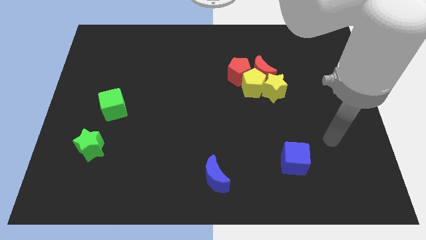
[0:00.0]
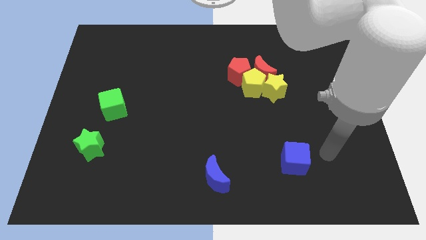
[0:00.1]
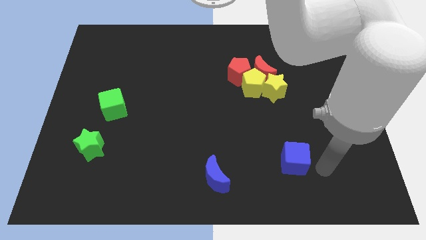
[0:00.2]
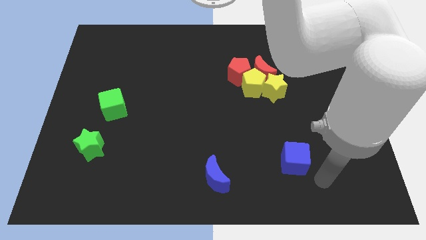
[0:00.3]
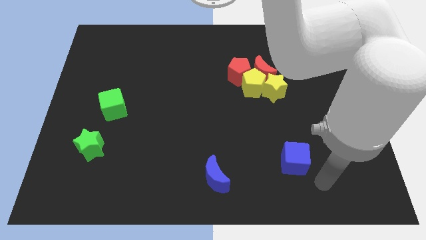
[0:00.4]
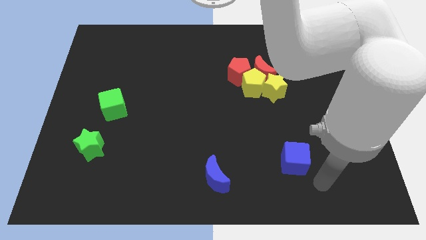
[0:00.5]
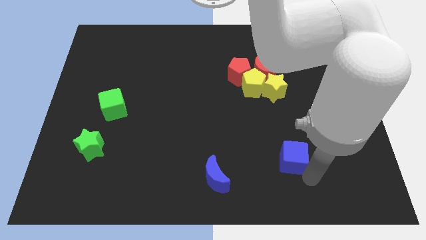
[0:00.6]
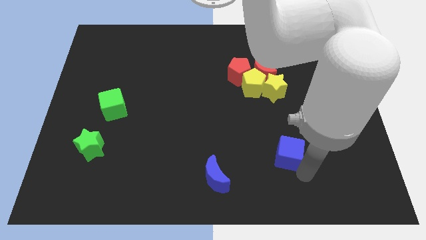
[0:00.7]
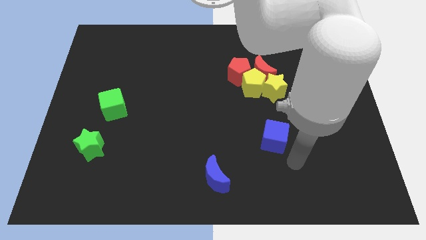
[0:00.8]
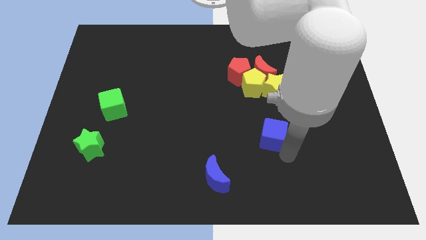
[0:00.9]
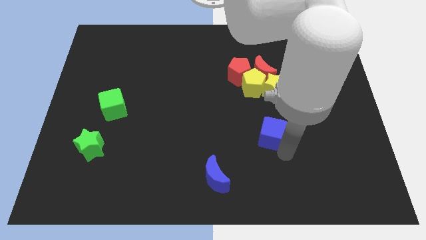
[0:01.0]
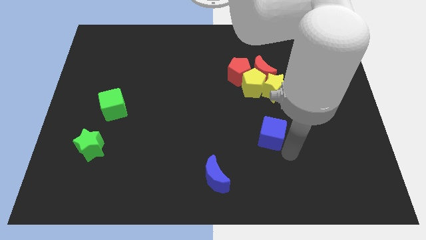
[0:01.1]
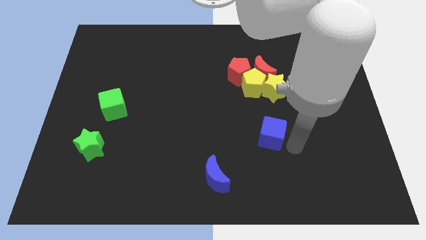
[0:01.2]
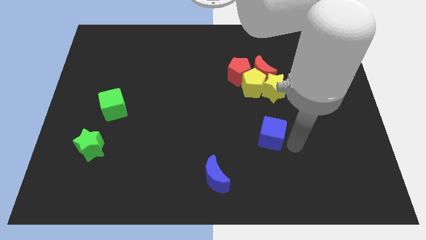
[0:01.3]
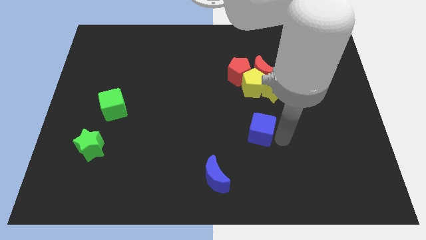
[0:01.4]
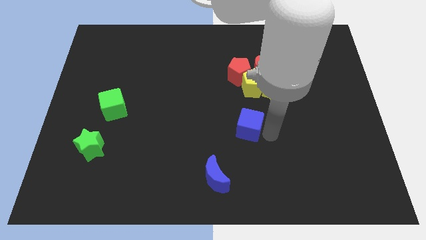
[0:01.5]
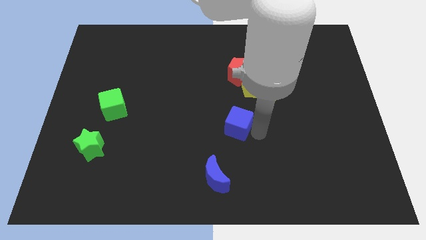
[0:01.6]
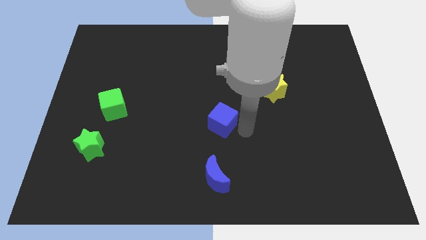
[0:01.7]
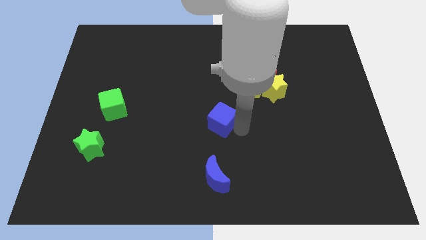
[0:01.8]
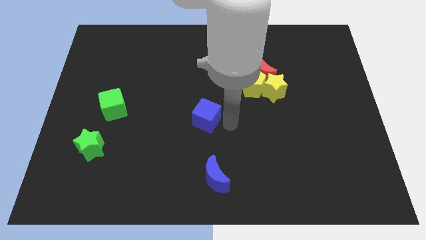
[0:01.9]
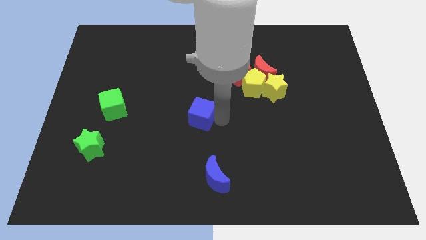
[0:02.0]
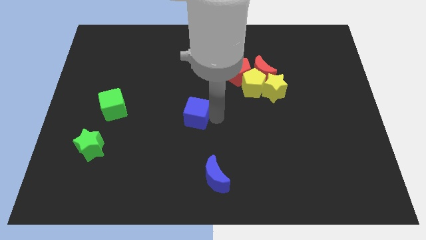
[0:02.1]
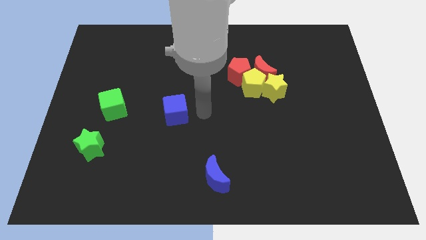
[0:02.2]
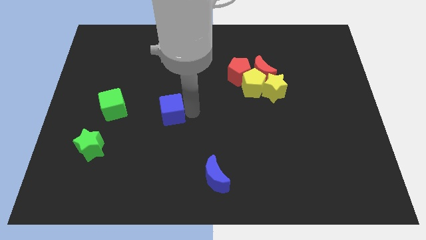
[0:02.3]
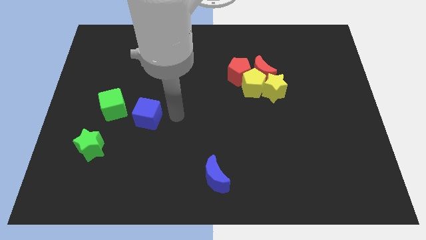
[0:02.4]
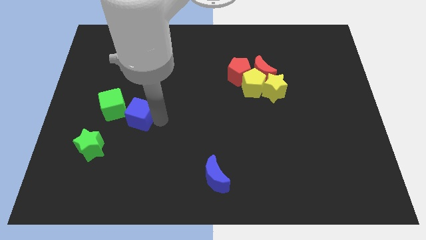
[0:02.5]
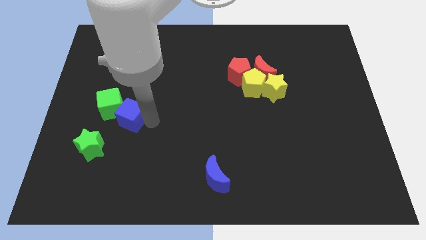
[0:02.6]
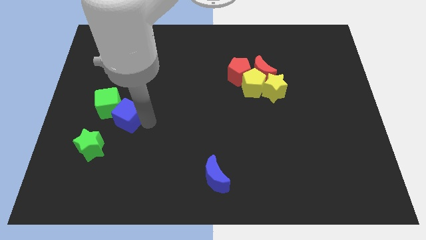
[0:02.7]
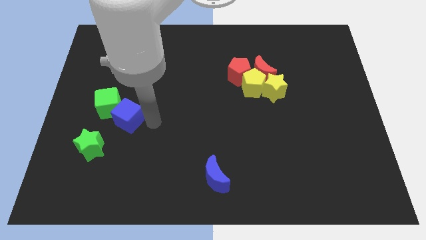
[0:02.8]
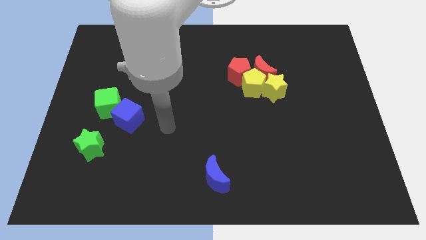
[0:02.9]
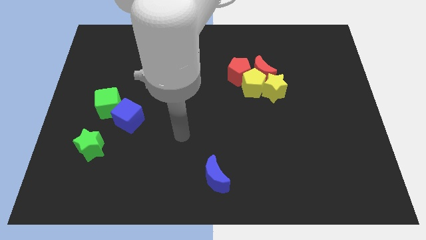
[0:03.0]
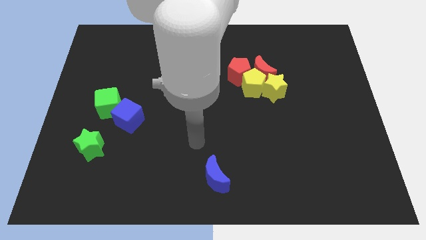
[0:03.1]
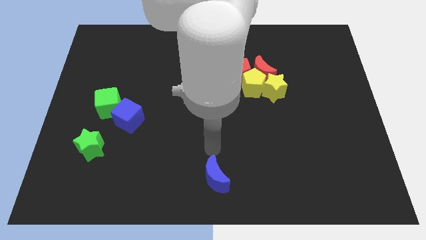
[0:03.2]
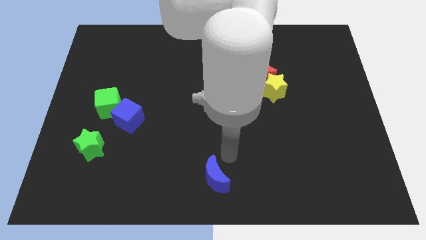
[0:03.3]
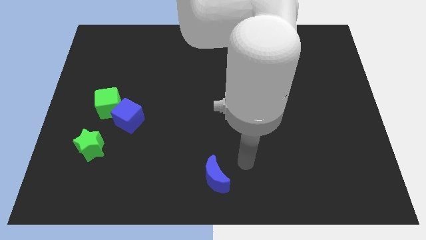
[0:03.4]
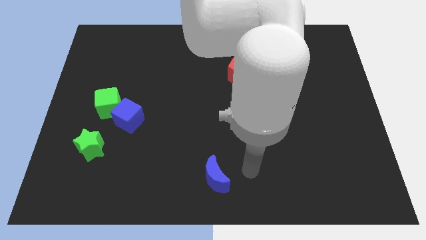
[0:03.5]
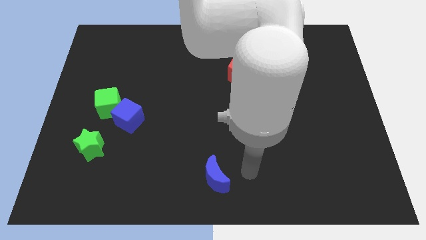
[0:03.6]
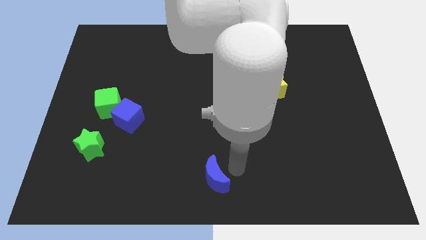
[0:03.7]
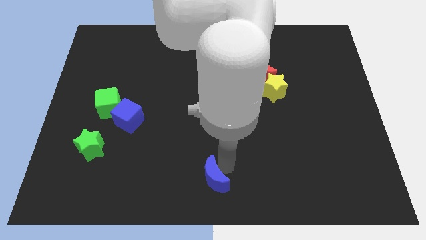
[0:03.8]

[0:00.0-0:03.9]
move the blue cube into the green cube

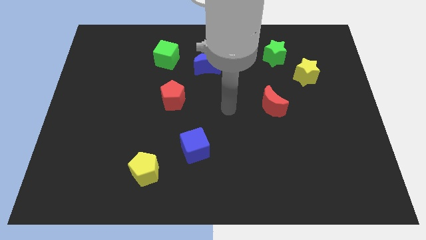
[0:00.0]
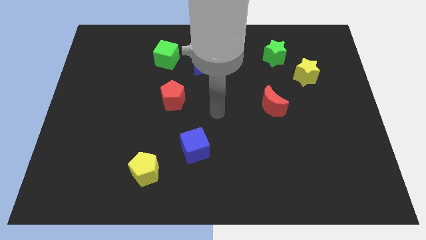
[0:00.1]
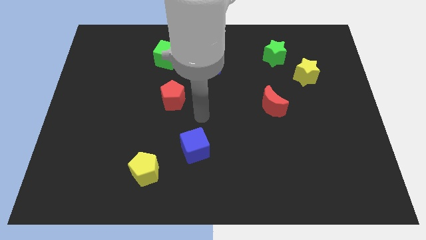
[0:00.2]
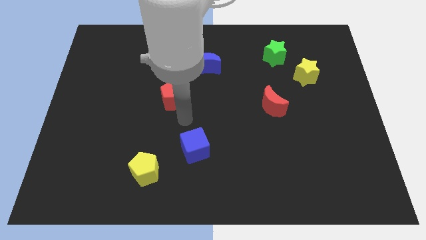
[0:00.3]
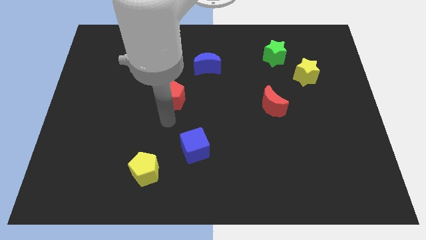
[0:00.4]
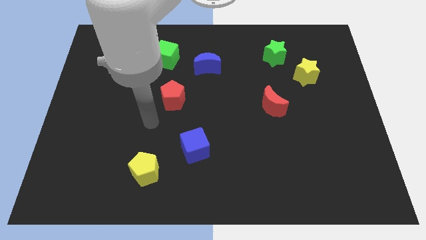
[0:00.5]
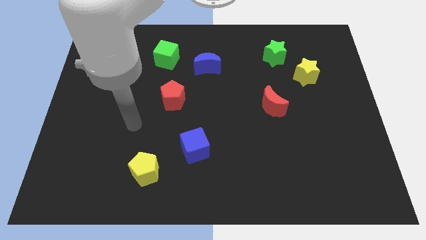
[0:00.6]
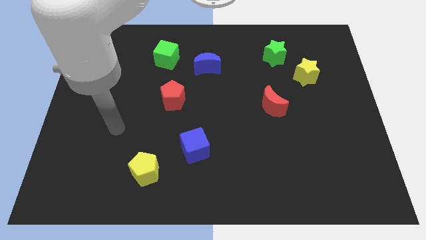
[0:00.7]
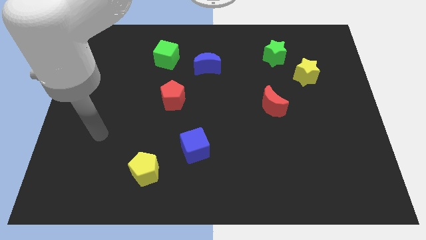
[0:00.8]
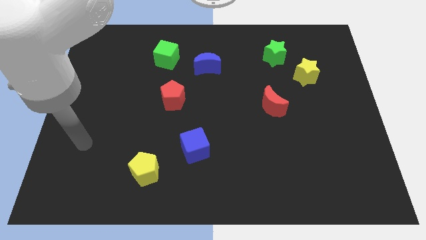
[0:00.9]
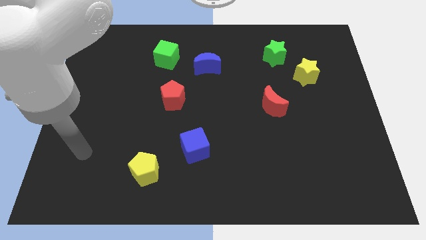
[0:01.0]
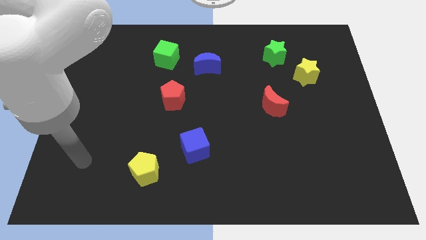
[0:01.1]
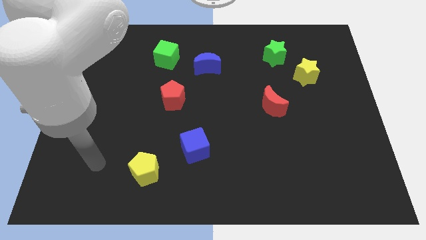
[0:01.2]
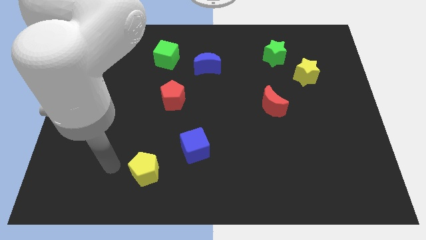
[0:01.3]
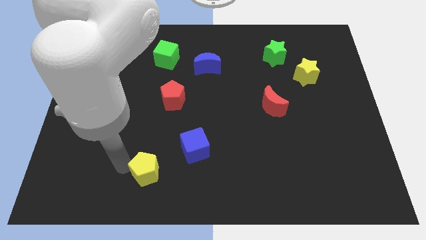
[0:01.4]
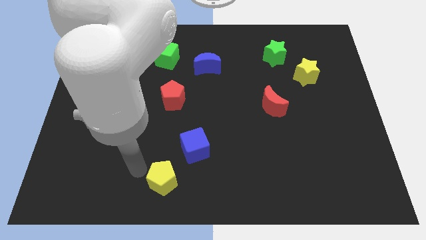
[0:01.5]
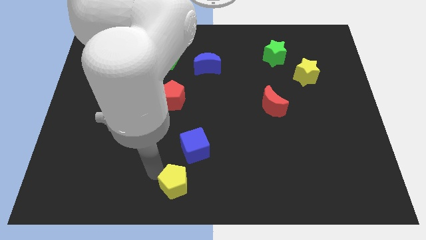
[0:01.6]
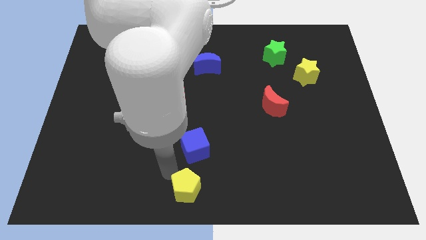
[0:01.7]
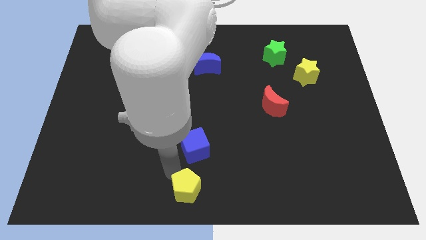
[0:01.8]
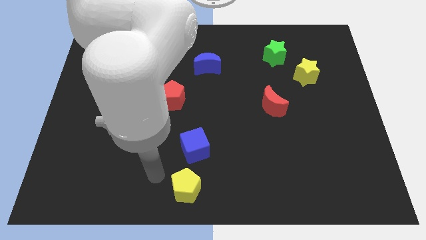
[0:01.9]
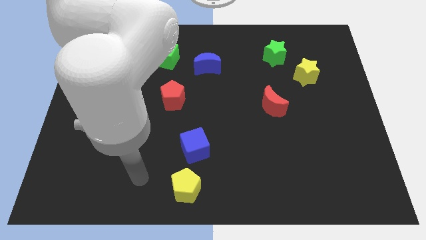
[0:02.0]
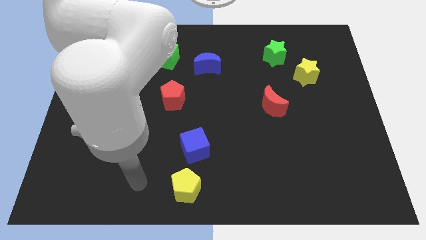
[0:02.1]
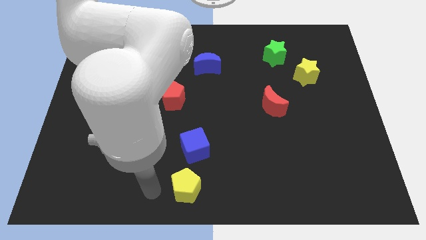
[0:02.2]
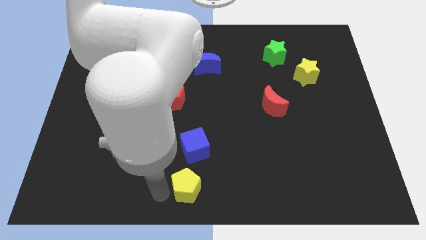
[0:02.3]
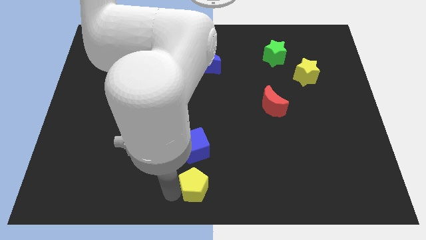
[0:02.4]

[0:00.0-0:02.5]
push the yellow pentagon towards the bottom center of the board

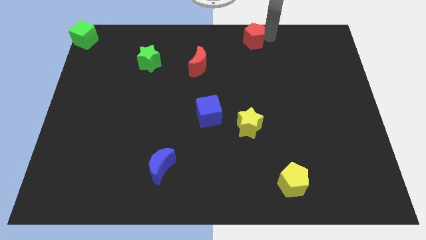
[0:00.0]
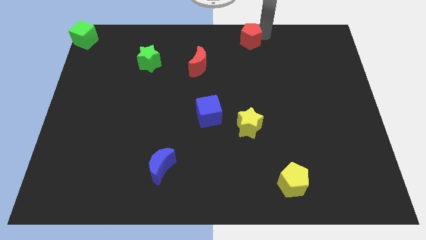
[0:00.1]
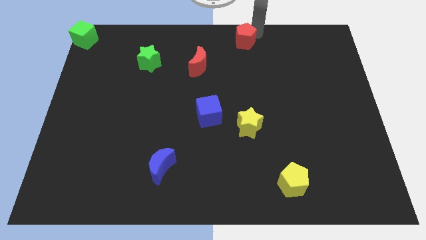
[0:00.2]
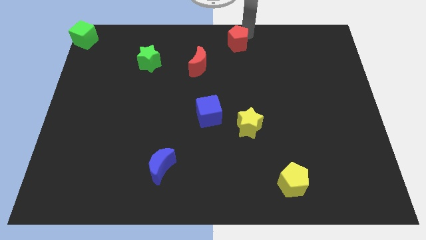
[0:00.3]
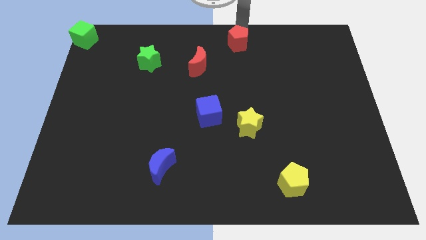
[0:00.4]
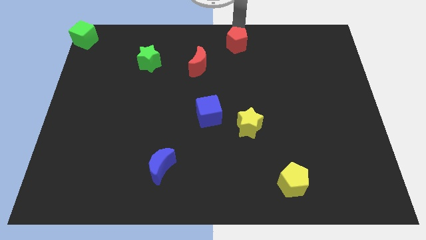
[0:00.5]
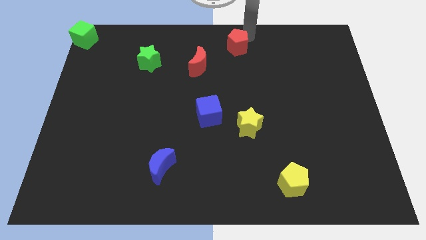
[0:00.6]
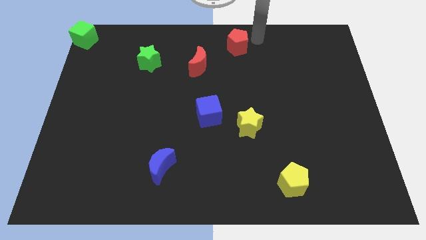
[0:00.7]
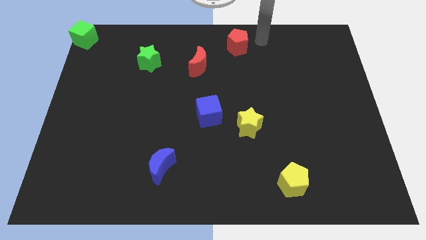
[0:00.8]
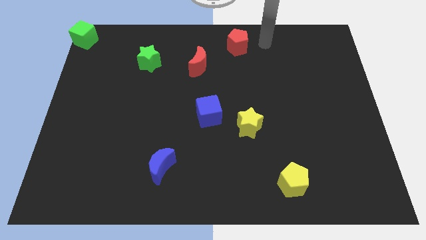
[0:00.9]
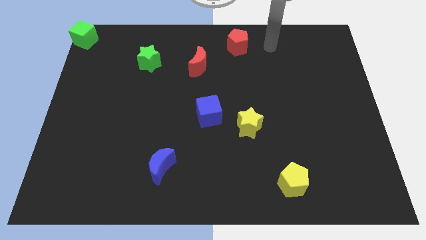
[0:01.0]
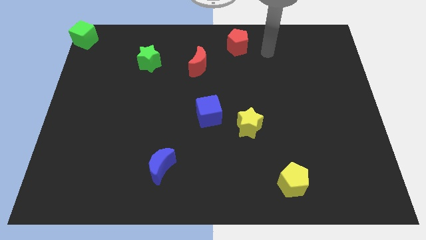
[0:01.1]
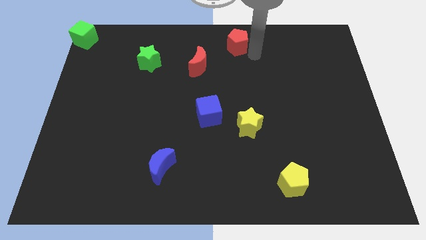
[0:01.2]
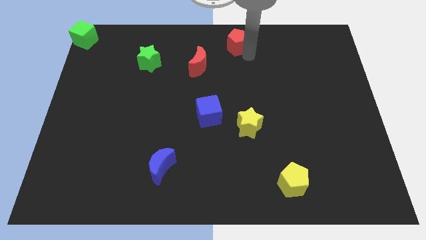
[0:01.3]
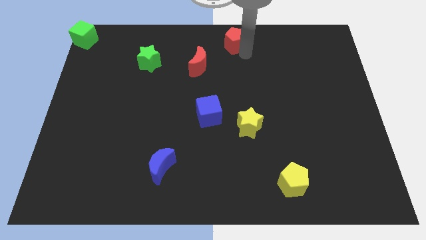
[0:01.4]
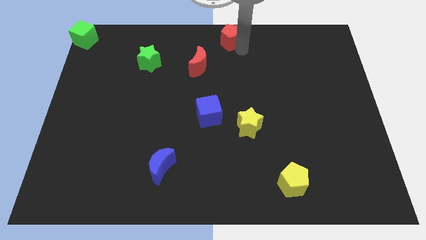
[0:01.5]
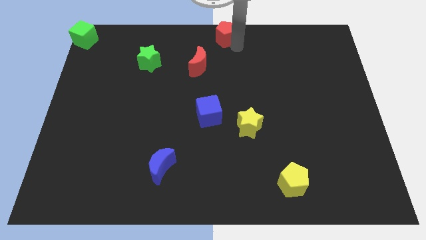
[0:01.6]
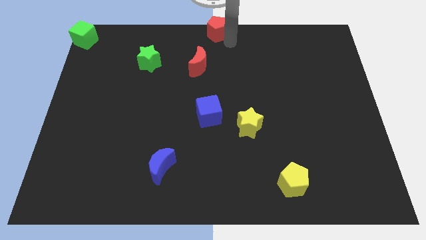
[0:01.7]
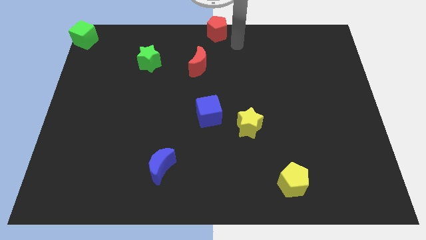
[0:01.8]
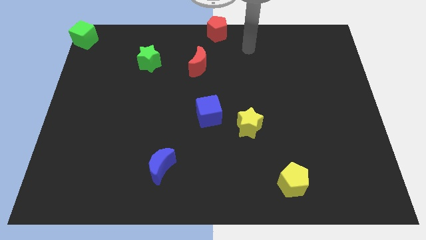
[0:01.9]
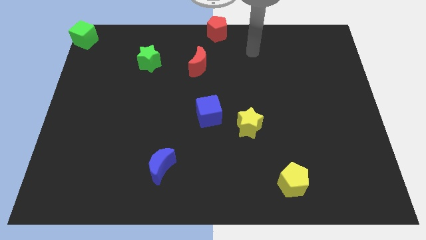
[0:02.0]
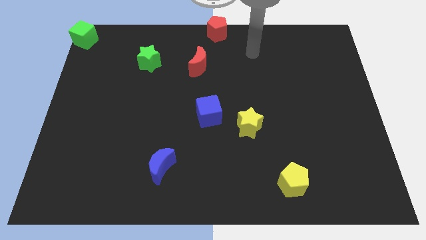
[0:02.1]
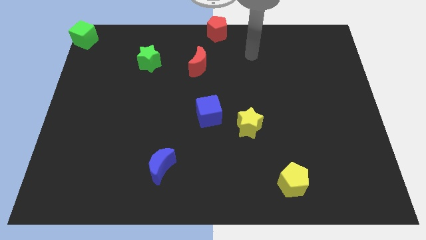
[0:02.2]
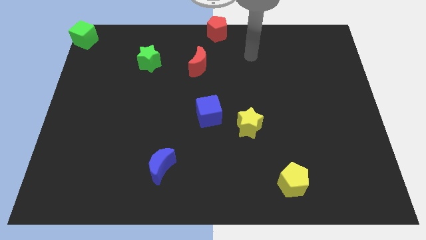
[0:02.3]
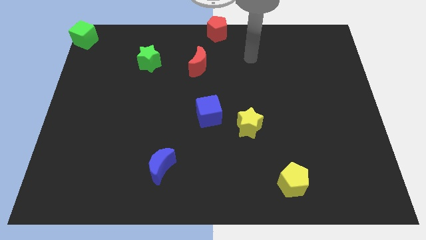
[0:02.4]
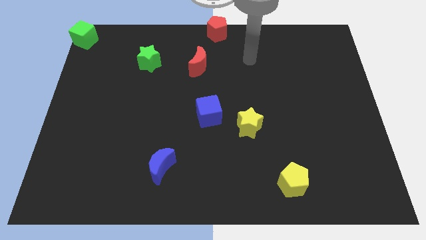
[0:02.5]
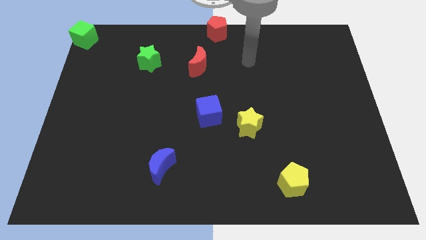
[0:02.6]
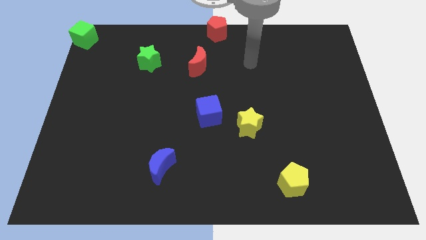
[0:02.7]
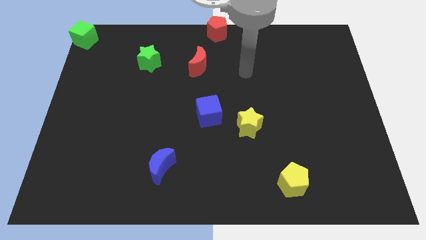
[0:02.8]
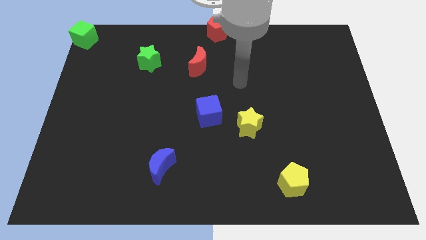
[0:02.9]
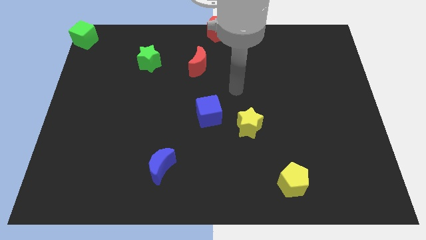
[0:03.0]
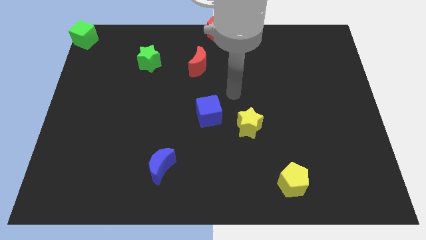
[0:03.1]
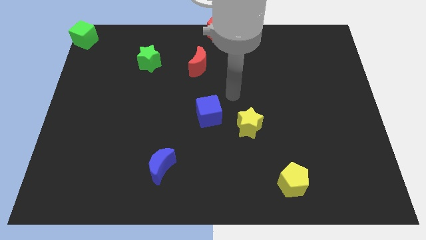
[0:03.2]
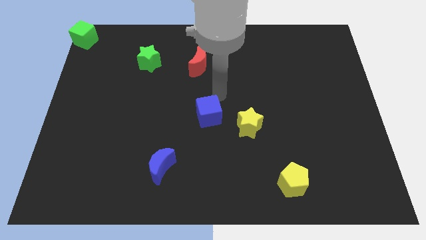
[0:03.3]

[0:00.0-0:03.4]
push the red pentagon towards left side
